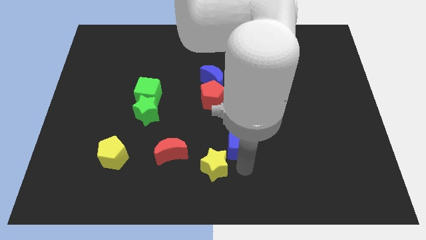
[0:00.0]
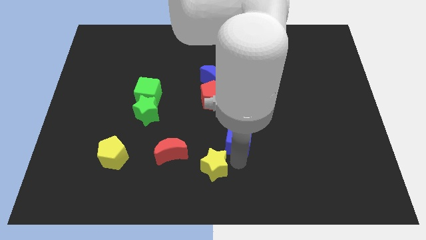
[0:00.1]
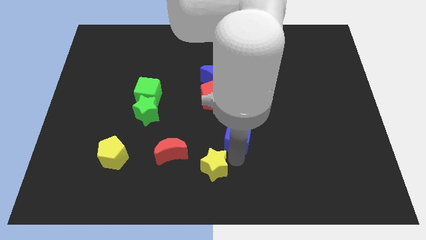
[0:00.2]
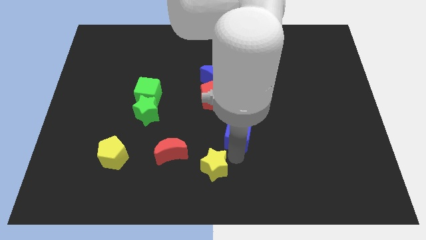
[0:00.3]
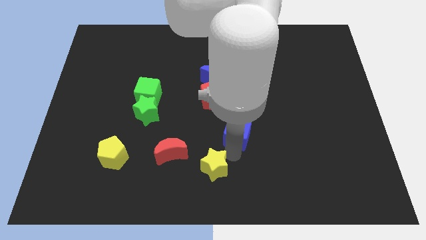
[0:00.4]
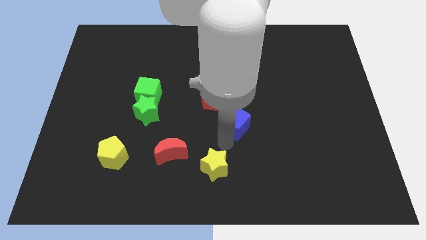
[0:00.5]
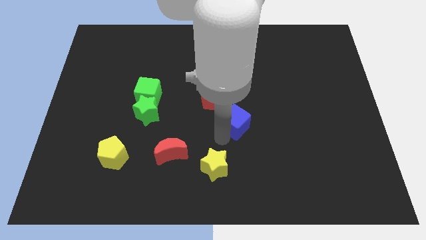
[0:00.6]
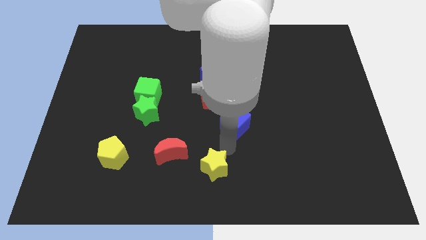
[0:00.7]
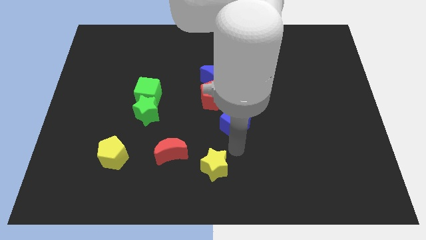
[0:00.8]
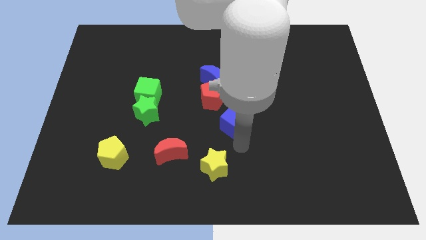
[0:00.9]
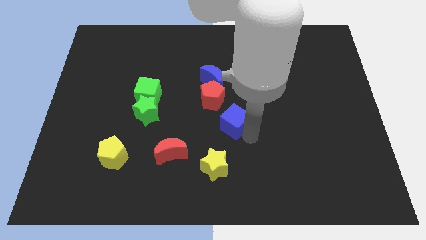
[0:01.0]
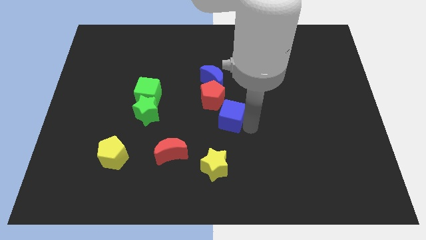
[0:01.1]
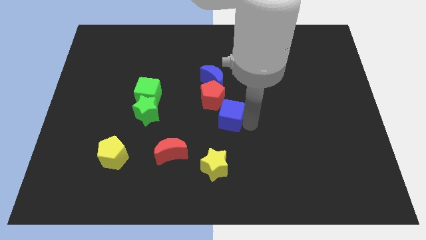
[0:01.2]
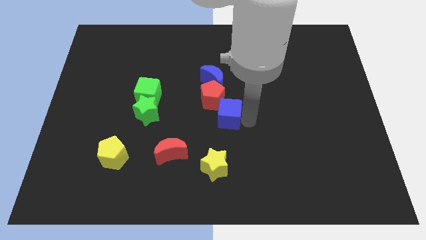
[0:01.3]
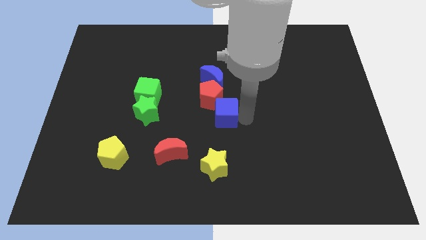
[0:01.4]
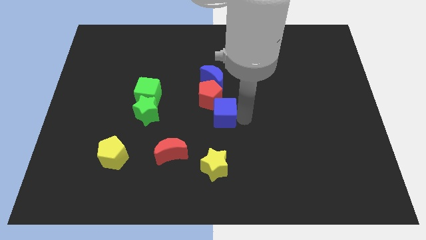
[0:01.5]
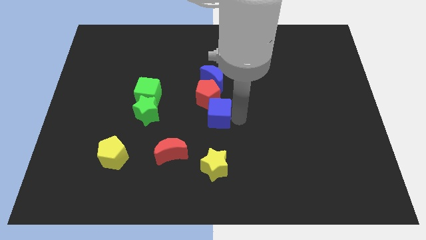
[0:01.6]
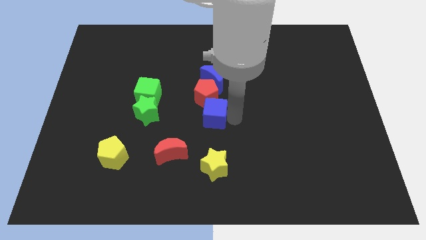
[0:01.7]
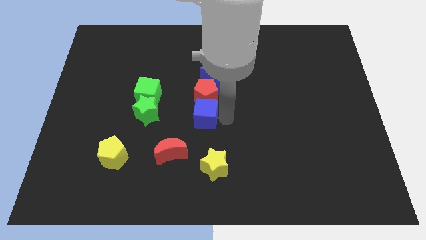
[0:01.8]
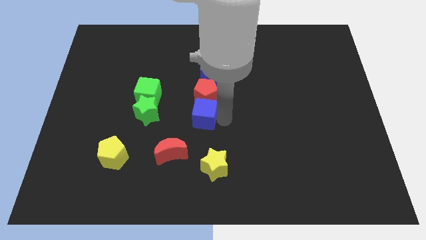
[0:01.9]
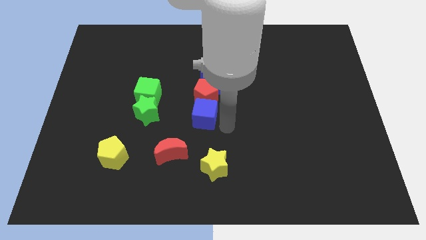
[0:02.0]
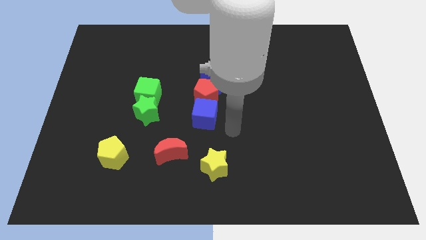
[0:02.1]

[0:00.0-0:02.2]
place the blue cube to the bottom of the red pentagon

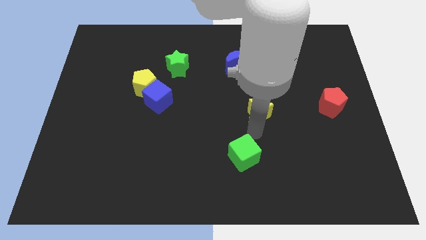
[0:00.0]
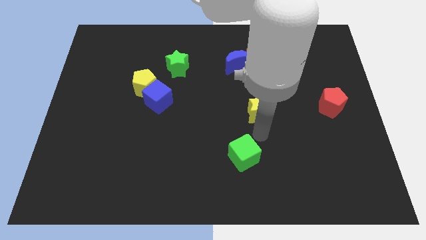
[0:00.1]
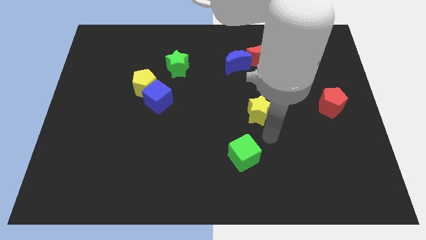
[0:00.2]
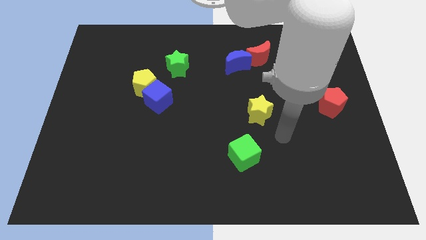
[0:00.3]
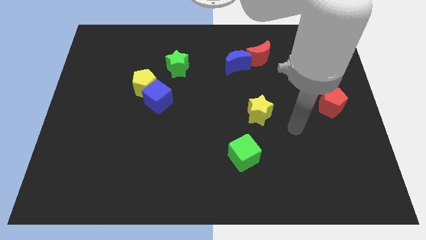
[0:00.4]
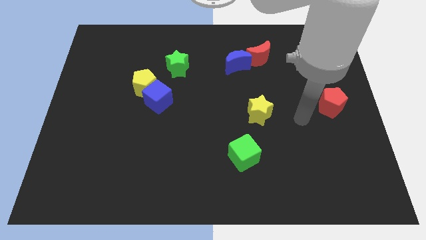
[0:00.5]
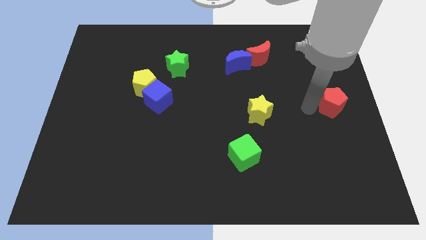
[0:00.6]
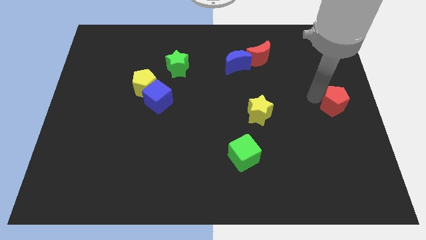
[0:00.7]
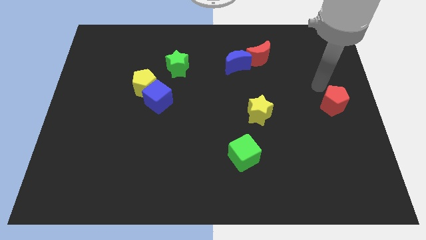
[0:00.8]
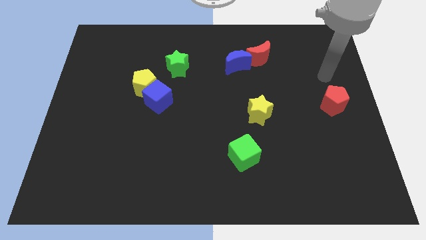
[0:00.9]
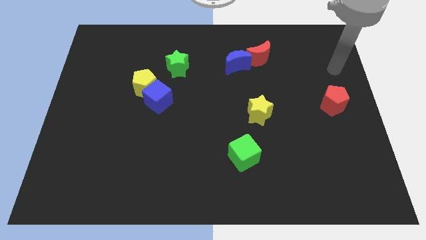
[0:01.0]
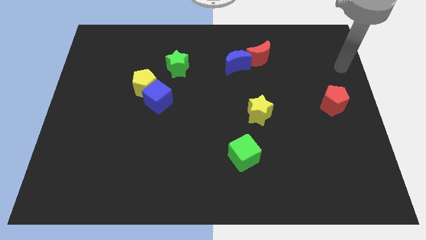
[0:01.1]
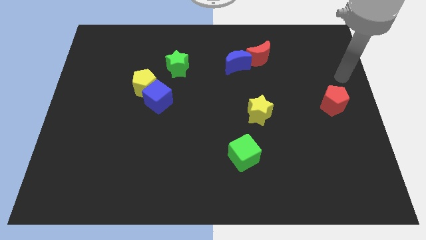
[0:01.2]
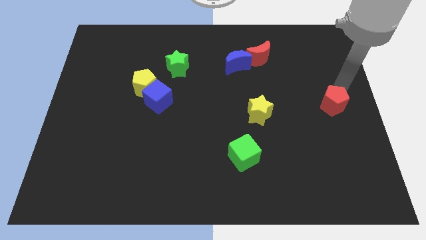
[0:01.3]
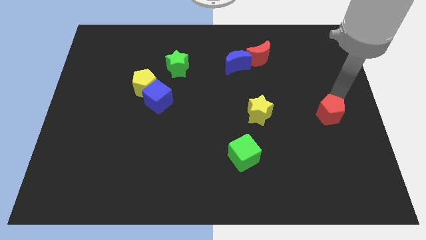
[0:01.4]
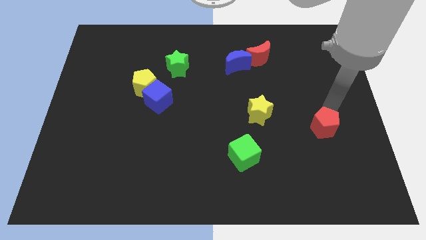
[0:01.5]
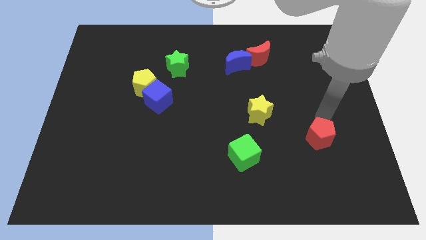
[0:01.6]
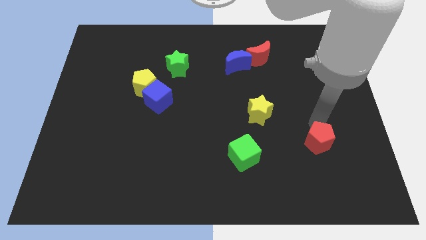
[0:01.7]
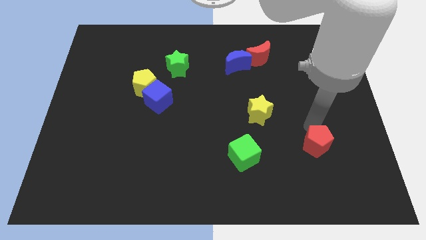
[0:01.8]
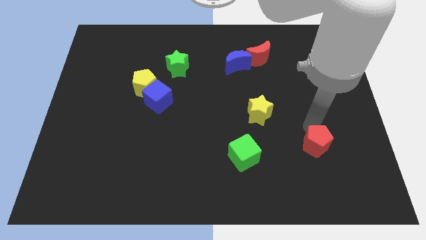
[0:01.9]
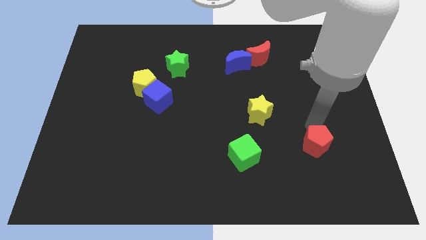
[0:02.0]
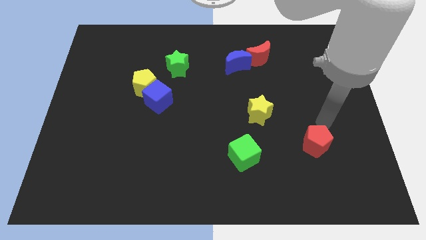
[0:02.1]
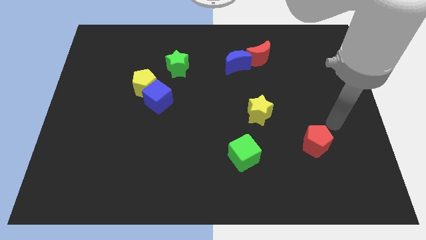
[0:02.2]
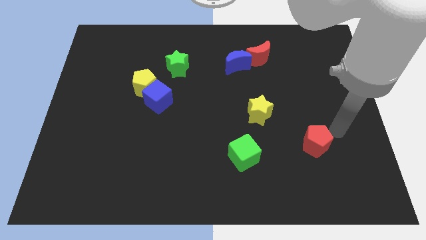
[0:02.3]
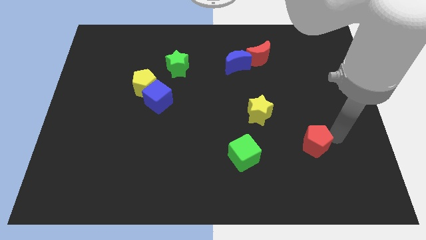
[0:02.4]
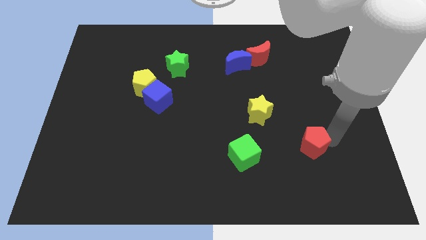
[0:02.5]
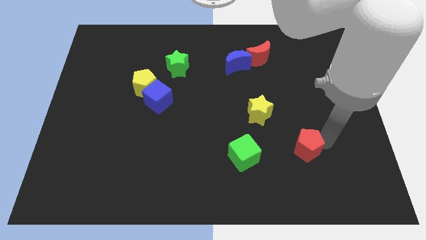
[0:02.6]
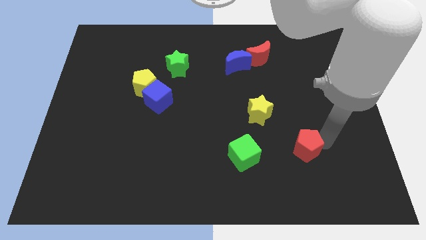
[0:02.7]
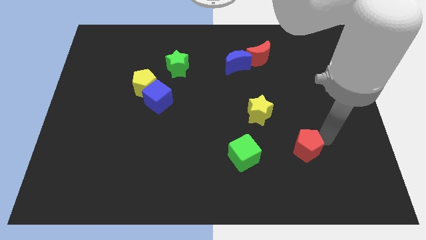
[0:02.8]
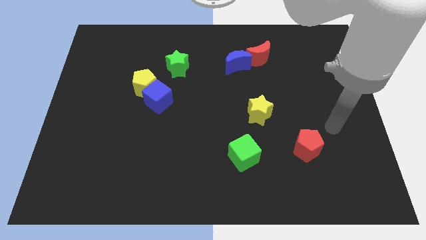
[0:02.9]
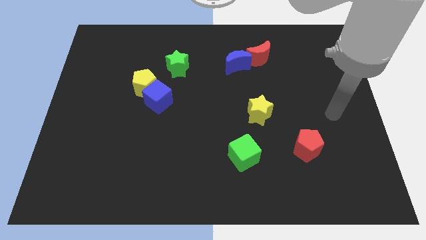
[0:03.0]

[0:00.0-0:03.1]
push red pentagon to the right of green cube

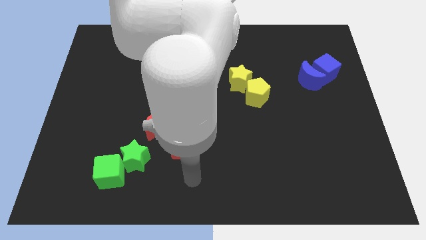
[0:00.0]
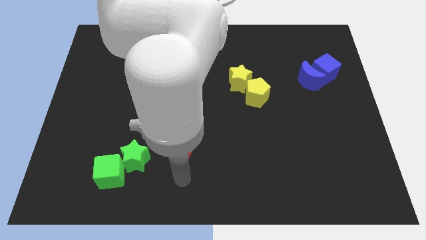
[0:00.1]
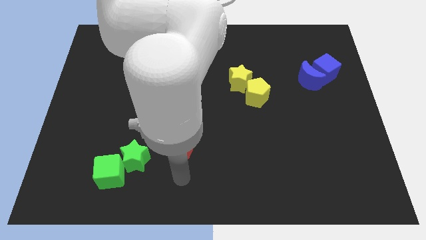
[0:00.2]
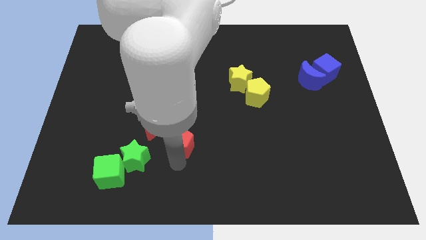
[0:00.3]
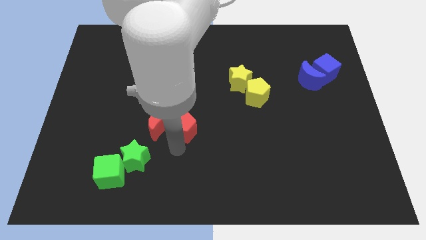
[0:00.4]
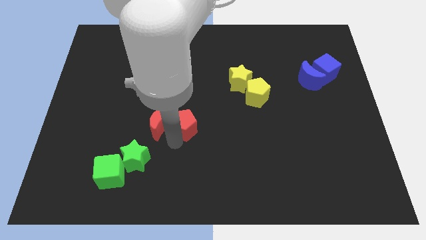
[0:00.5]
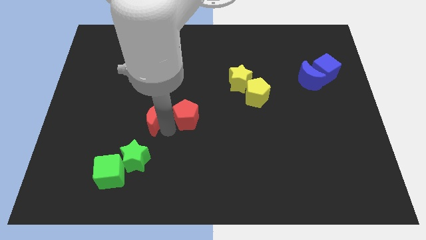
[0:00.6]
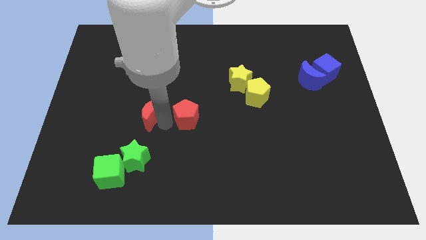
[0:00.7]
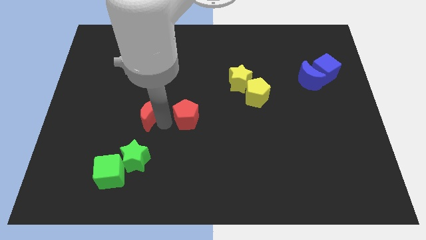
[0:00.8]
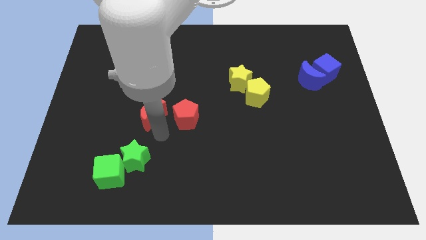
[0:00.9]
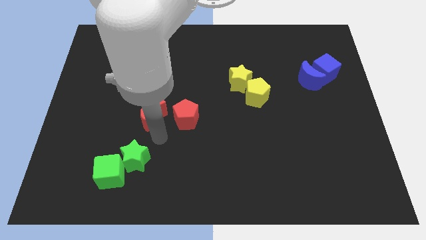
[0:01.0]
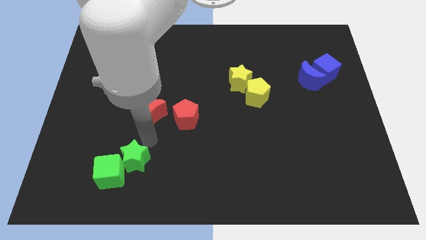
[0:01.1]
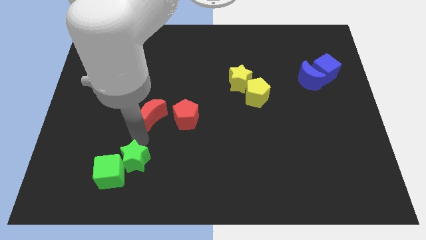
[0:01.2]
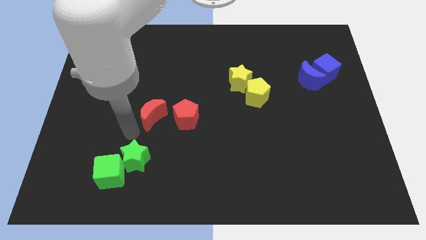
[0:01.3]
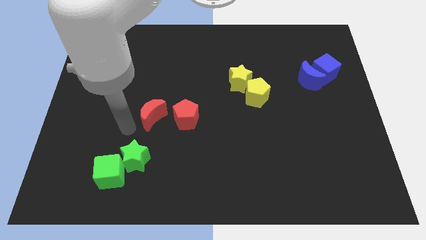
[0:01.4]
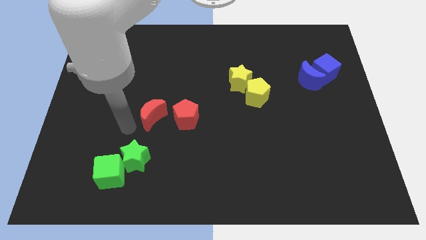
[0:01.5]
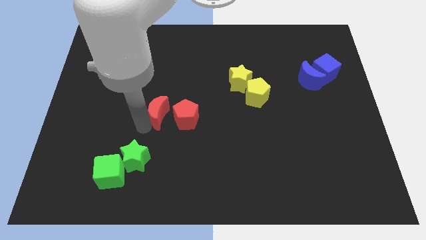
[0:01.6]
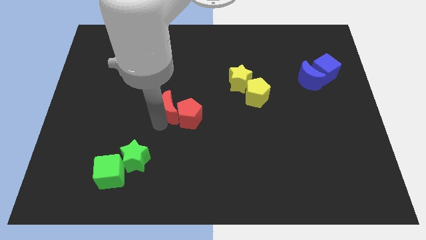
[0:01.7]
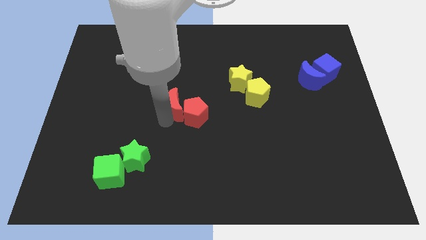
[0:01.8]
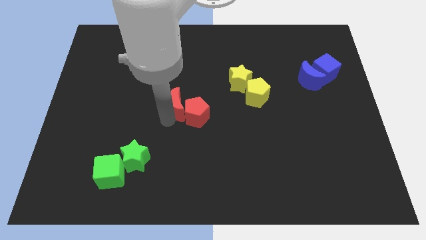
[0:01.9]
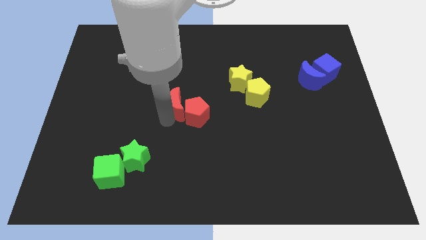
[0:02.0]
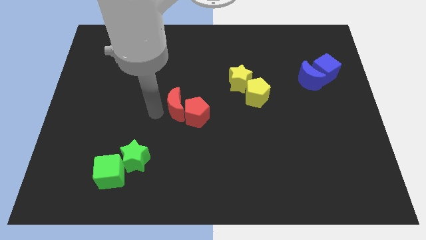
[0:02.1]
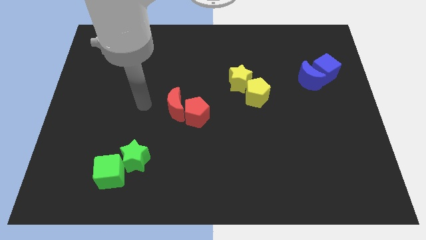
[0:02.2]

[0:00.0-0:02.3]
push the red blocks near to the center of the board

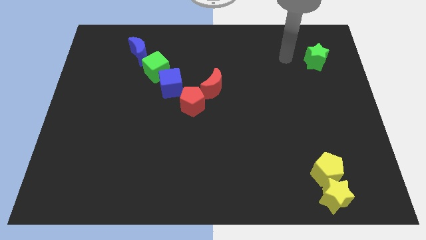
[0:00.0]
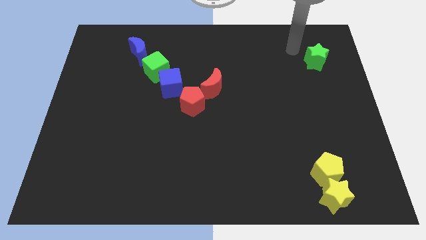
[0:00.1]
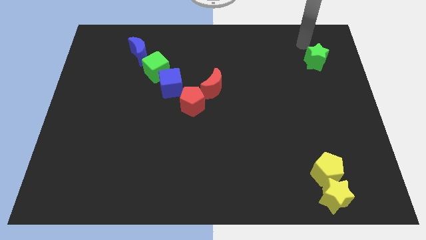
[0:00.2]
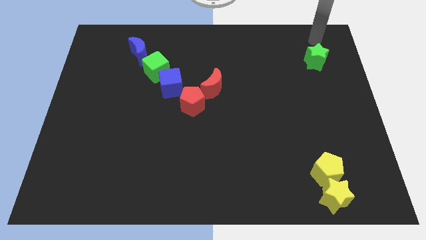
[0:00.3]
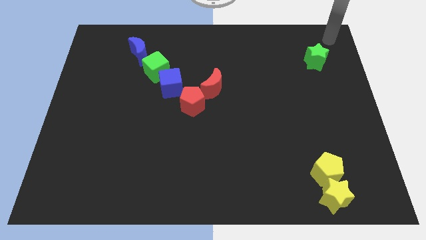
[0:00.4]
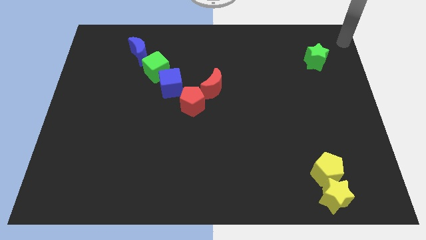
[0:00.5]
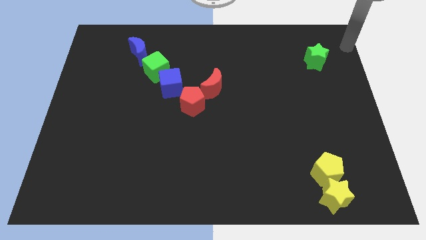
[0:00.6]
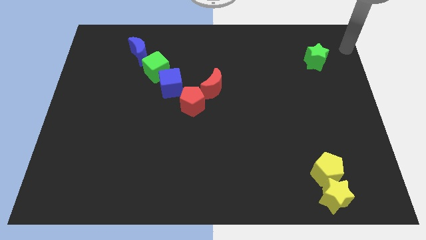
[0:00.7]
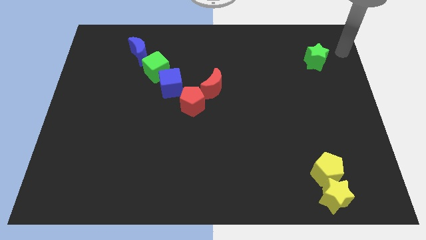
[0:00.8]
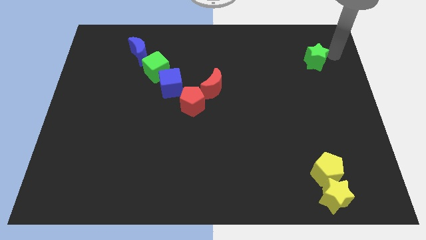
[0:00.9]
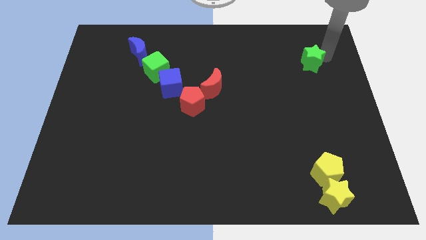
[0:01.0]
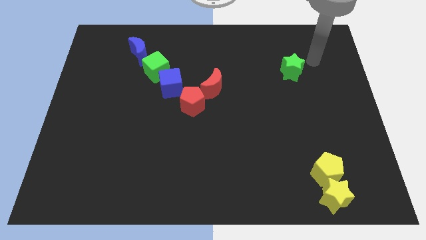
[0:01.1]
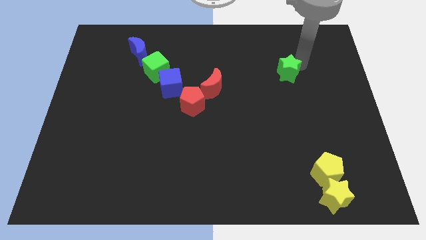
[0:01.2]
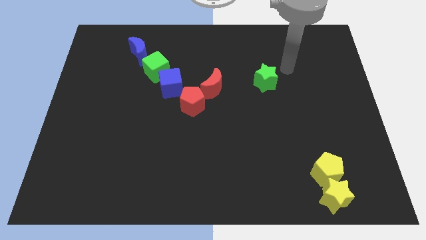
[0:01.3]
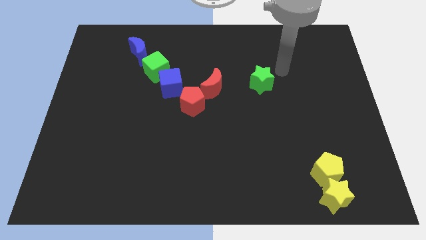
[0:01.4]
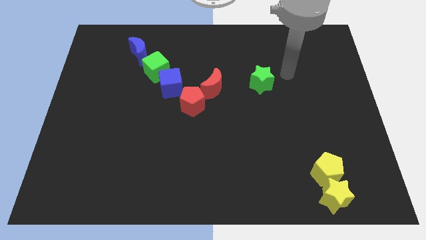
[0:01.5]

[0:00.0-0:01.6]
slide the green star horizontally to the right side of the red crescent
